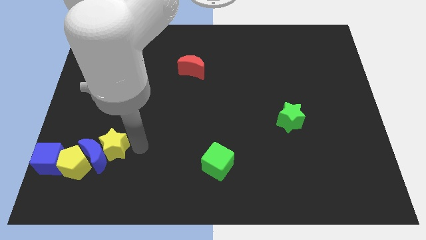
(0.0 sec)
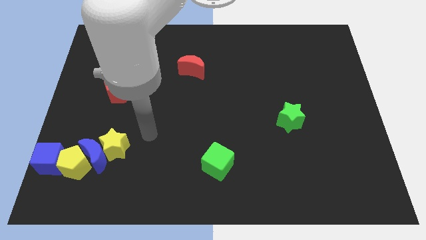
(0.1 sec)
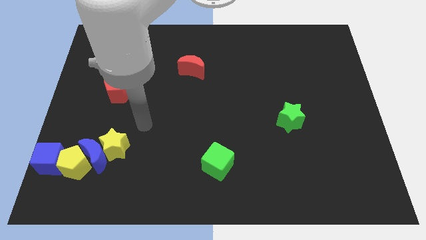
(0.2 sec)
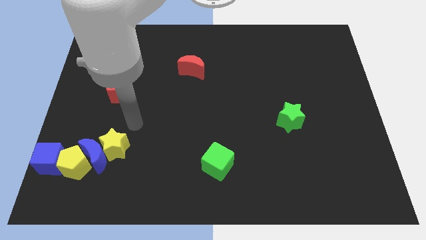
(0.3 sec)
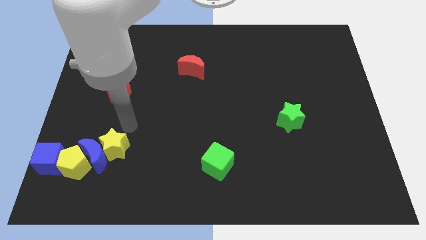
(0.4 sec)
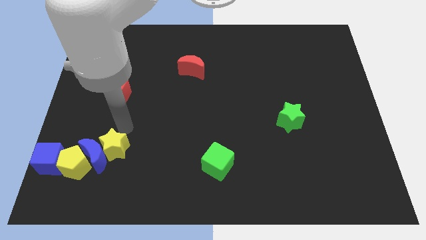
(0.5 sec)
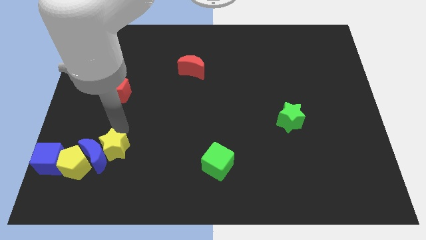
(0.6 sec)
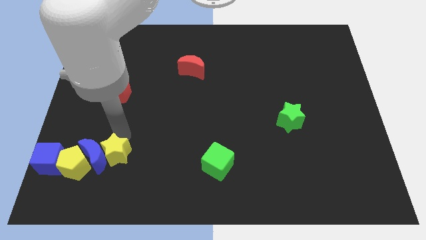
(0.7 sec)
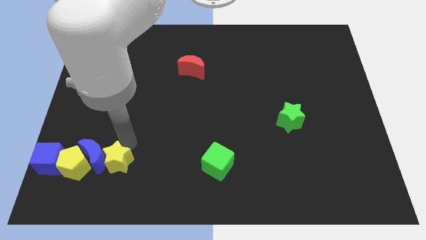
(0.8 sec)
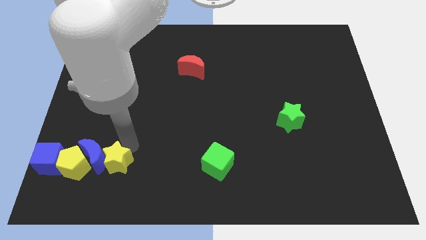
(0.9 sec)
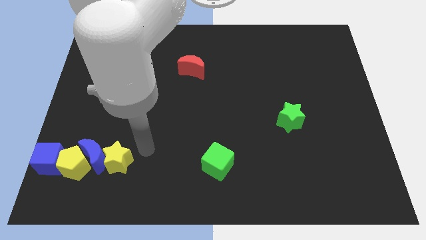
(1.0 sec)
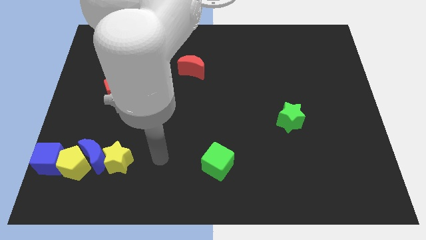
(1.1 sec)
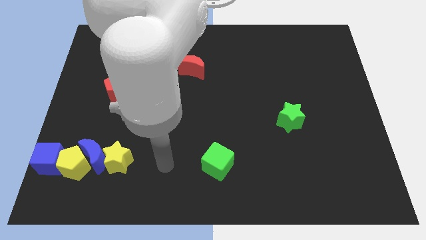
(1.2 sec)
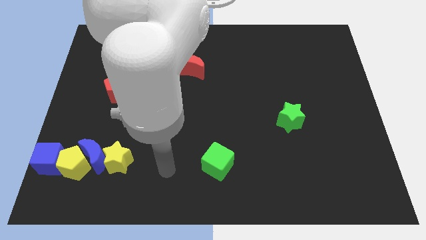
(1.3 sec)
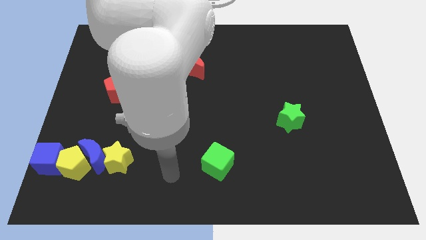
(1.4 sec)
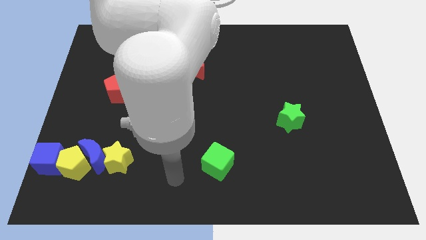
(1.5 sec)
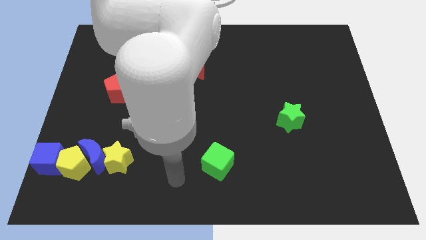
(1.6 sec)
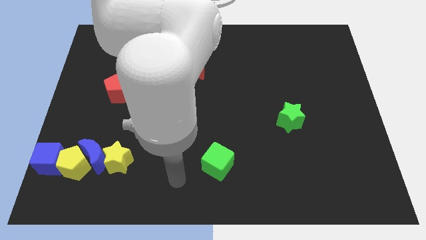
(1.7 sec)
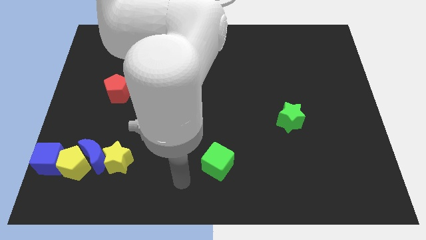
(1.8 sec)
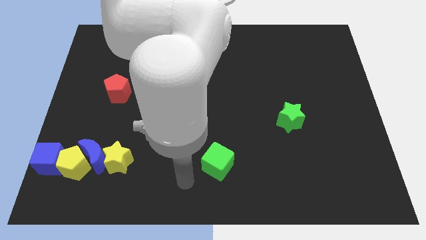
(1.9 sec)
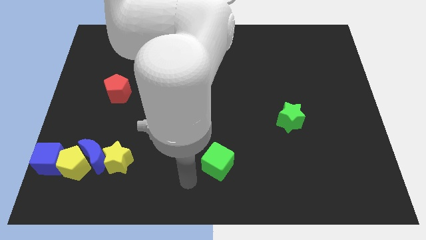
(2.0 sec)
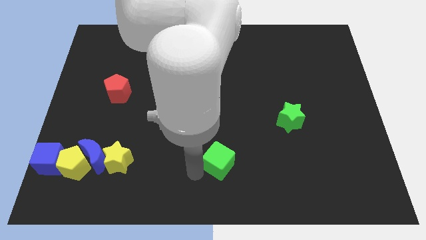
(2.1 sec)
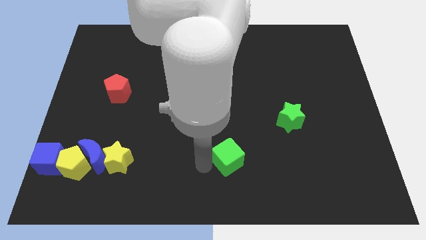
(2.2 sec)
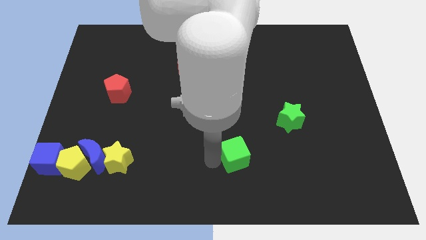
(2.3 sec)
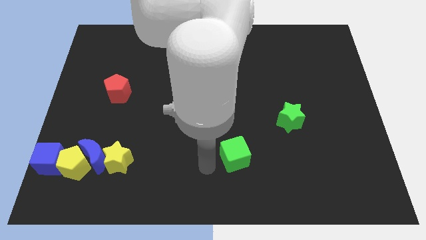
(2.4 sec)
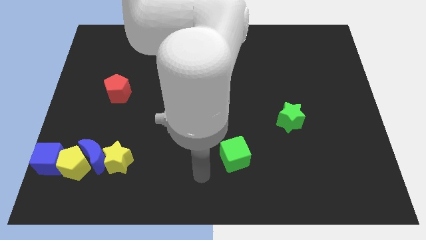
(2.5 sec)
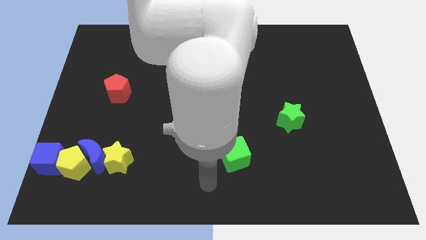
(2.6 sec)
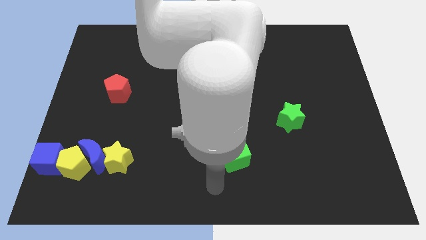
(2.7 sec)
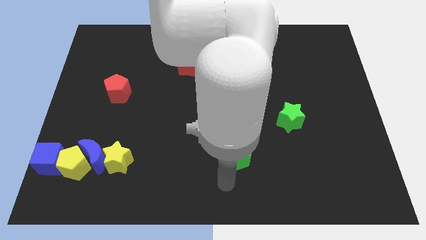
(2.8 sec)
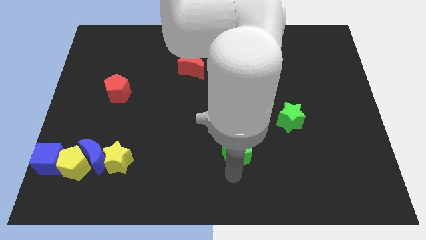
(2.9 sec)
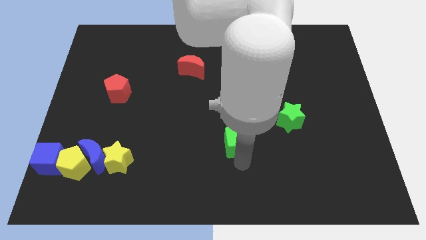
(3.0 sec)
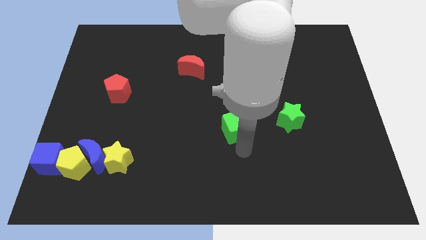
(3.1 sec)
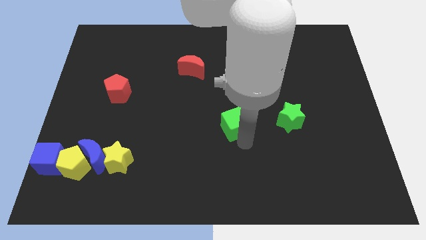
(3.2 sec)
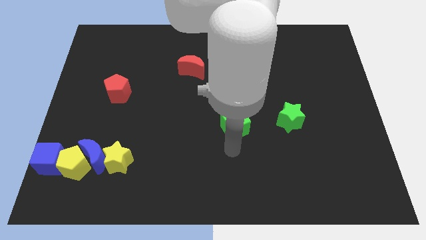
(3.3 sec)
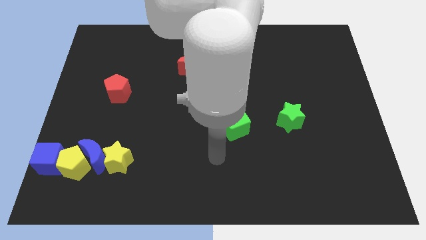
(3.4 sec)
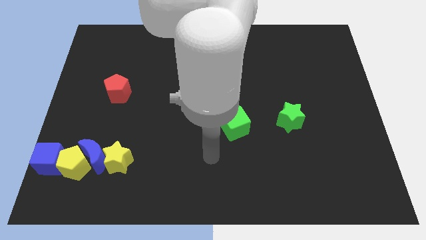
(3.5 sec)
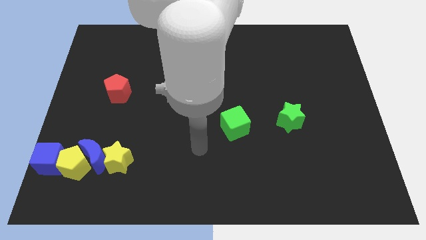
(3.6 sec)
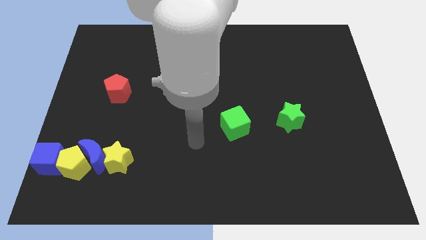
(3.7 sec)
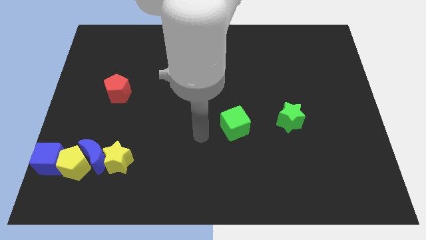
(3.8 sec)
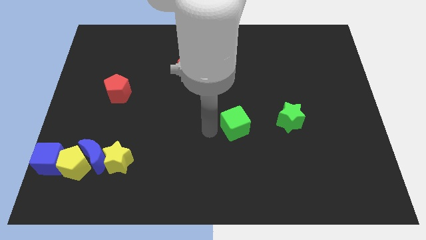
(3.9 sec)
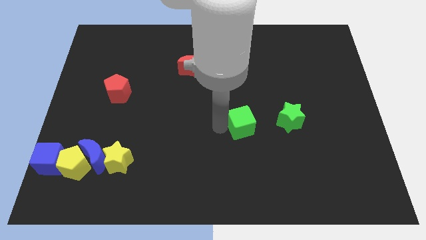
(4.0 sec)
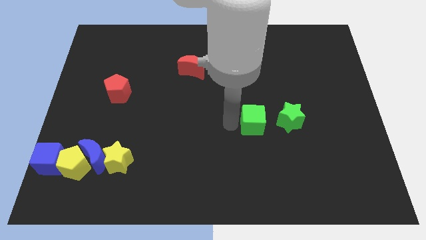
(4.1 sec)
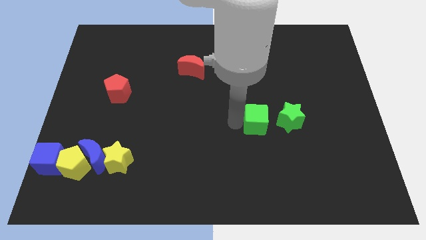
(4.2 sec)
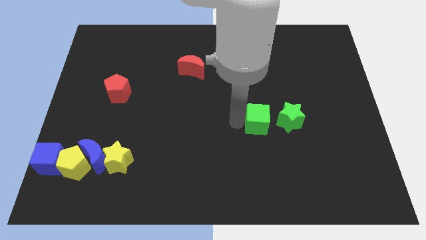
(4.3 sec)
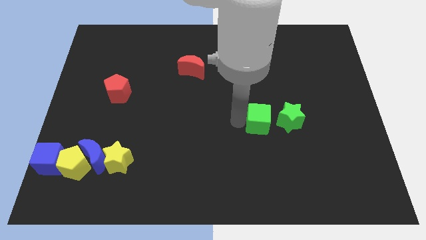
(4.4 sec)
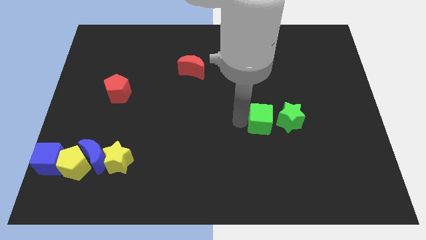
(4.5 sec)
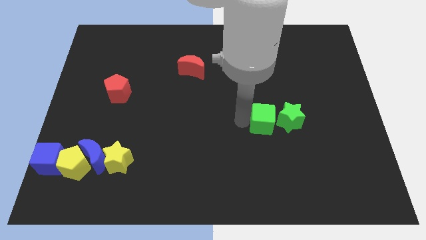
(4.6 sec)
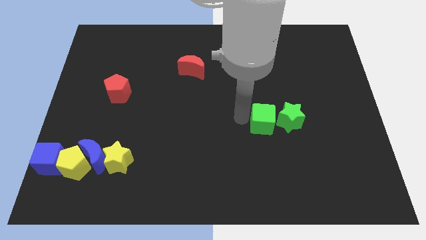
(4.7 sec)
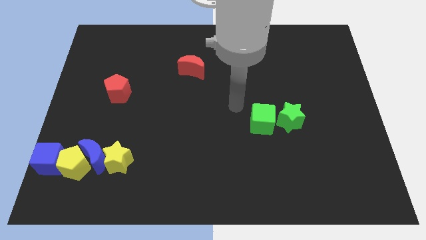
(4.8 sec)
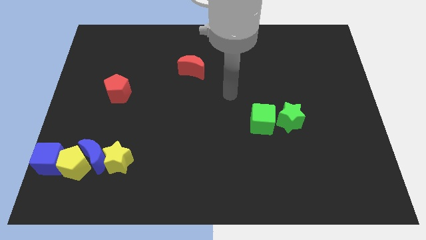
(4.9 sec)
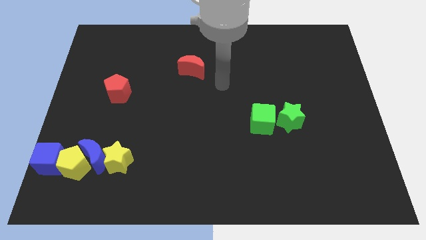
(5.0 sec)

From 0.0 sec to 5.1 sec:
move the green cube left to the green star

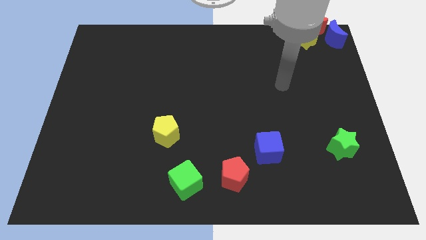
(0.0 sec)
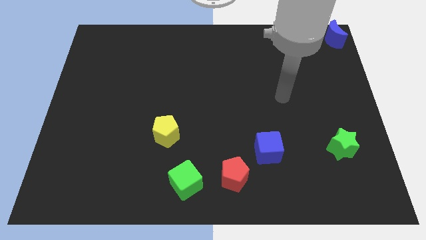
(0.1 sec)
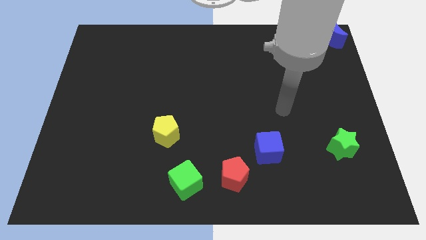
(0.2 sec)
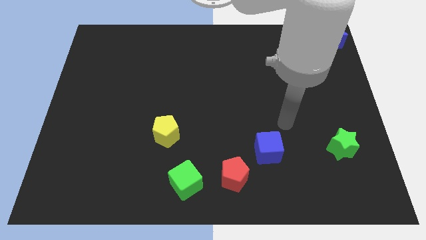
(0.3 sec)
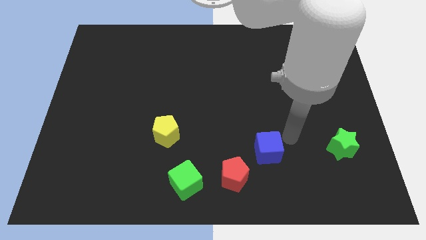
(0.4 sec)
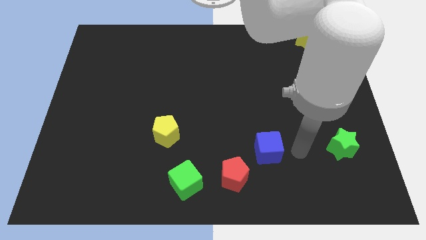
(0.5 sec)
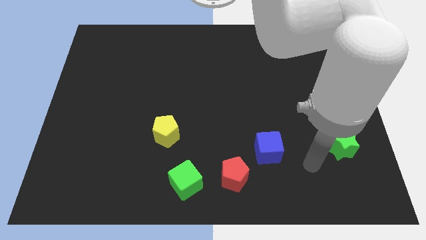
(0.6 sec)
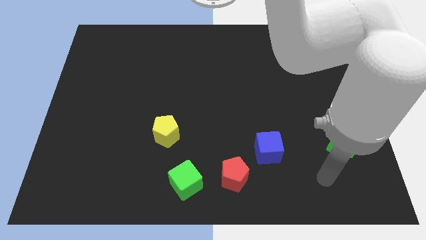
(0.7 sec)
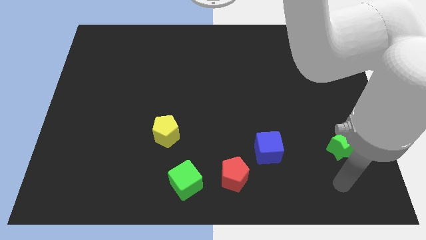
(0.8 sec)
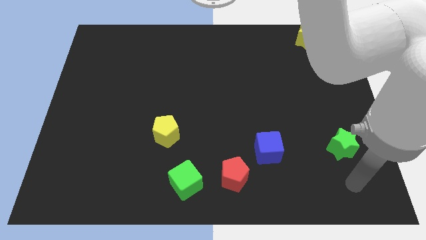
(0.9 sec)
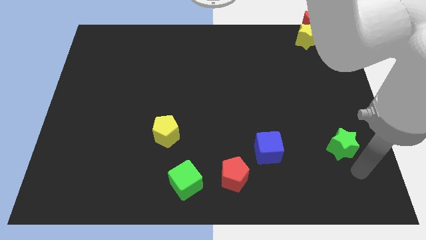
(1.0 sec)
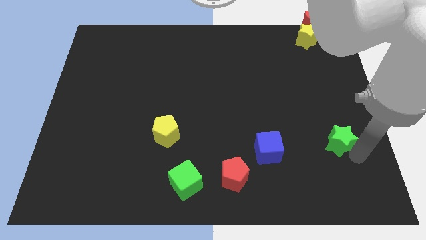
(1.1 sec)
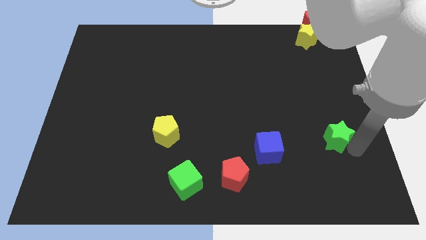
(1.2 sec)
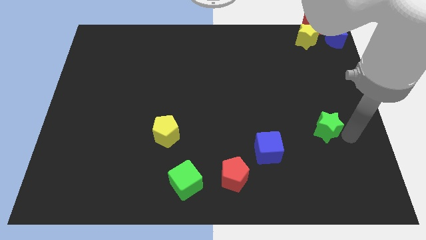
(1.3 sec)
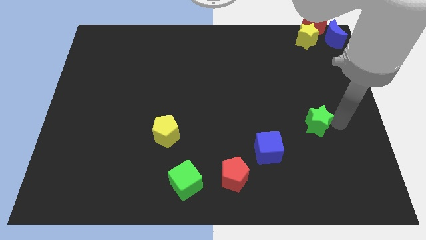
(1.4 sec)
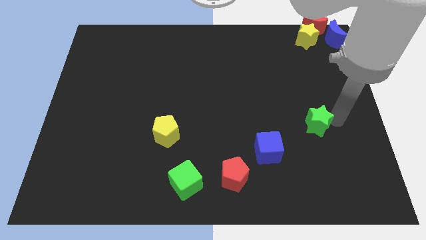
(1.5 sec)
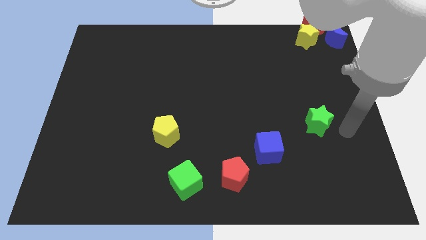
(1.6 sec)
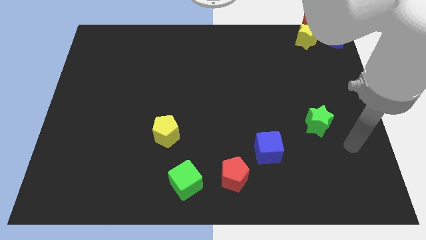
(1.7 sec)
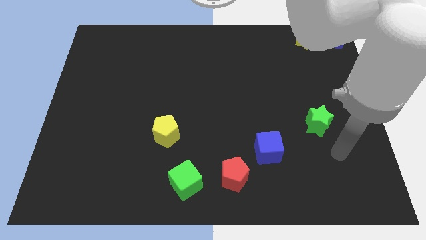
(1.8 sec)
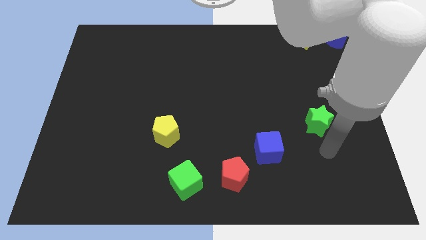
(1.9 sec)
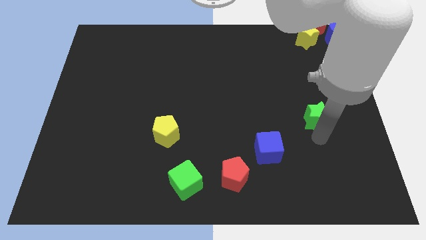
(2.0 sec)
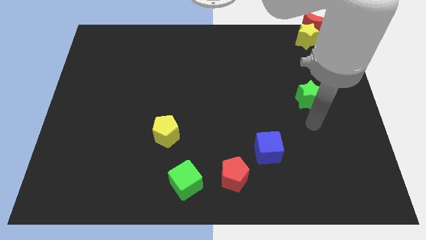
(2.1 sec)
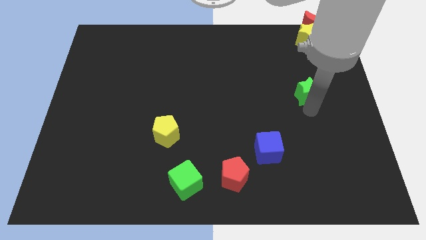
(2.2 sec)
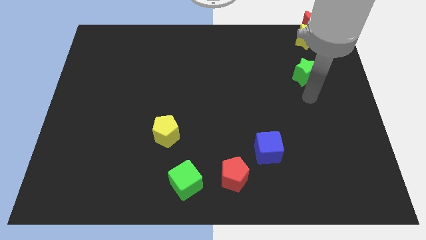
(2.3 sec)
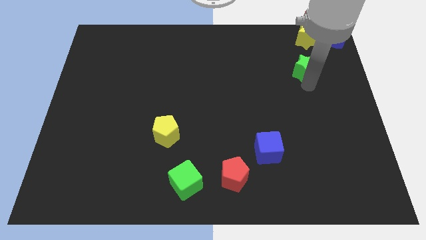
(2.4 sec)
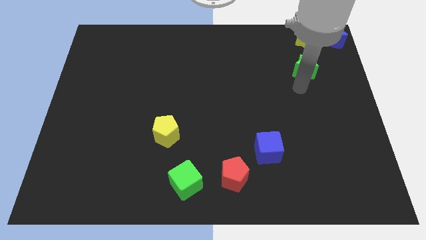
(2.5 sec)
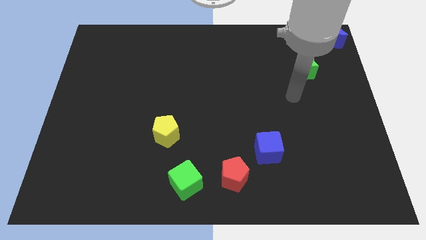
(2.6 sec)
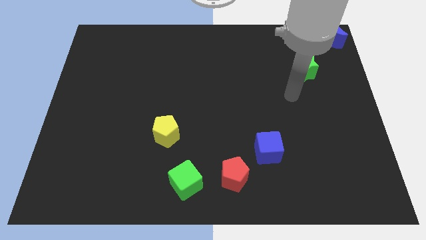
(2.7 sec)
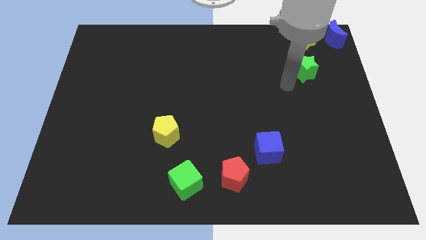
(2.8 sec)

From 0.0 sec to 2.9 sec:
move the green star towards the blue crescent

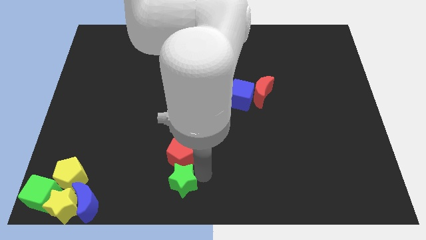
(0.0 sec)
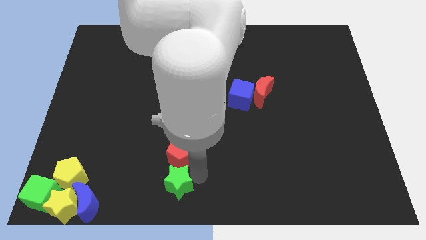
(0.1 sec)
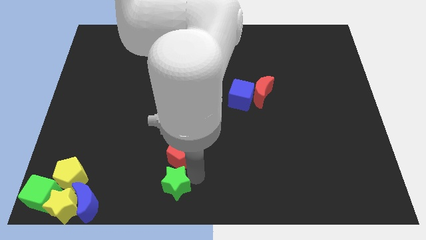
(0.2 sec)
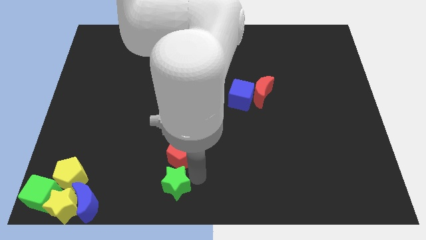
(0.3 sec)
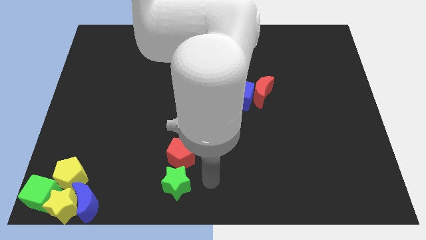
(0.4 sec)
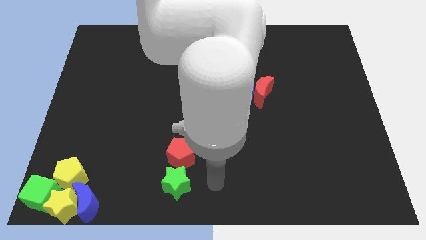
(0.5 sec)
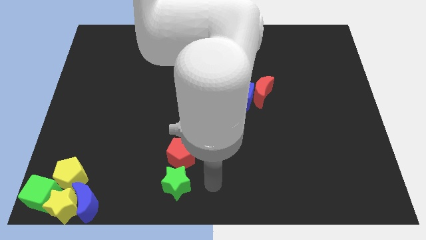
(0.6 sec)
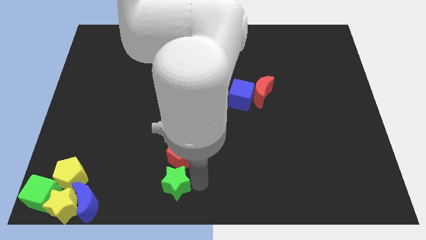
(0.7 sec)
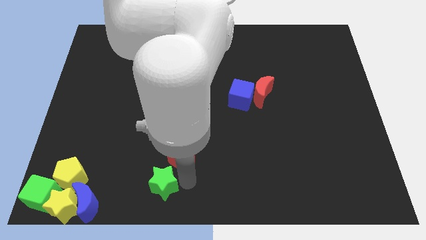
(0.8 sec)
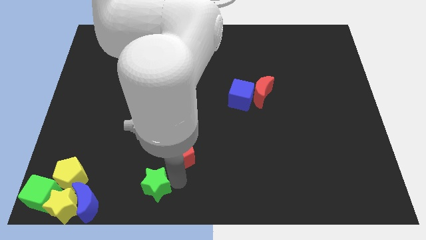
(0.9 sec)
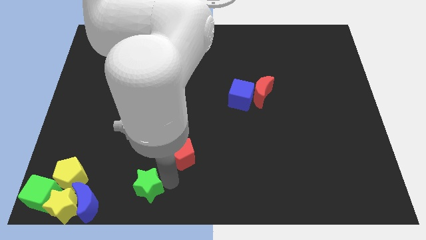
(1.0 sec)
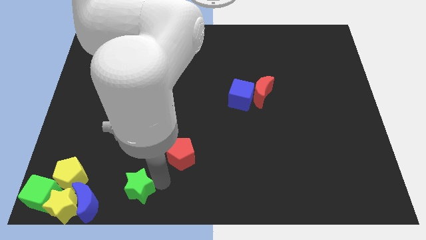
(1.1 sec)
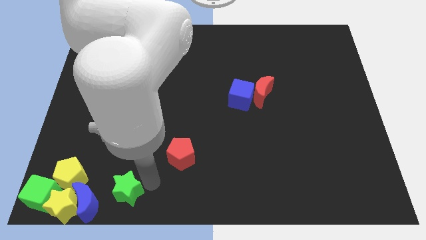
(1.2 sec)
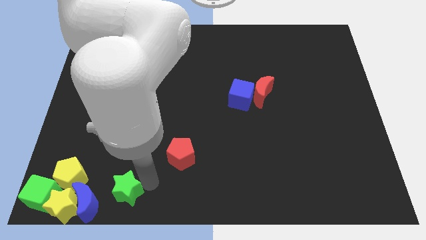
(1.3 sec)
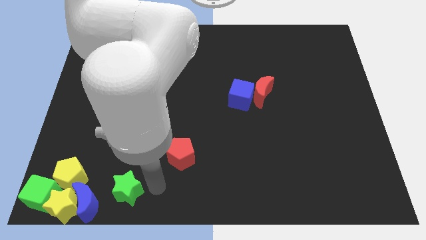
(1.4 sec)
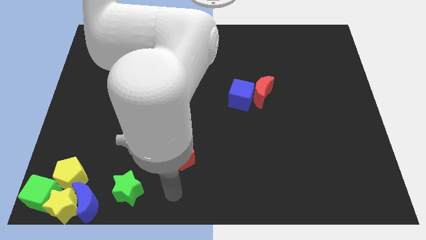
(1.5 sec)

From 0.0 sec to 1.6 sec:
slide the green star slightly to the left
